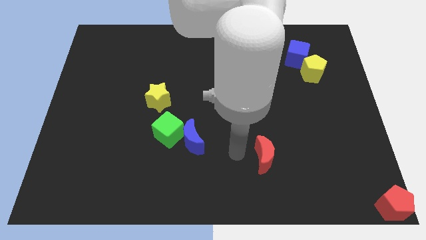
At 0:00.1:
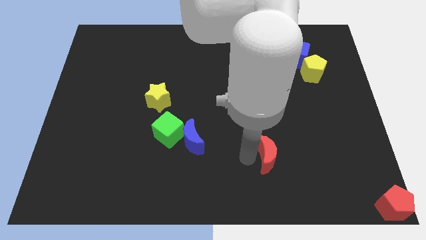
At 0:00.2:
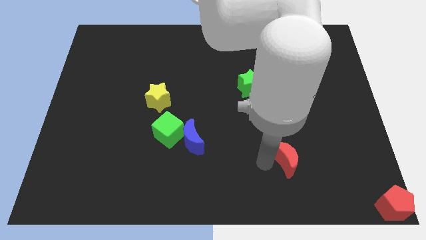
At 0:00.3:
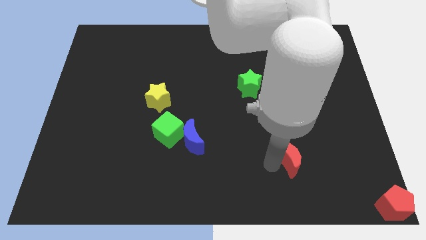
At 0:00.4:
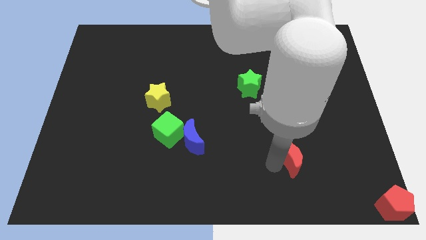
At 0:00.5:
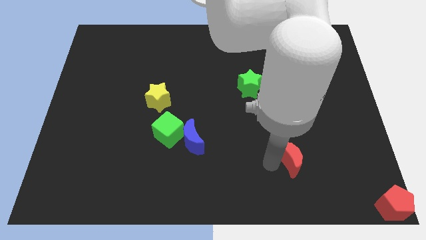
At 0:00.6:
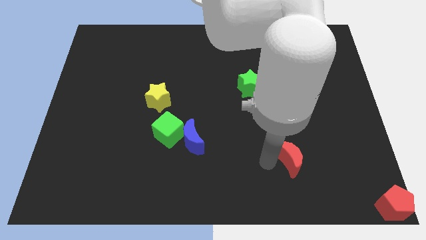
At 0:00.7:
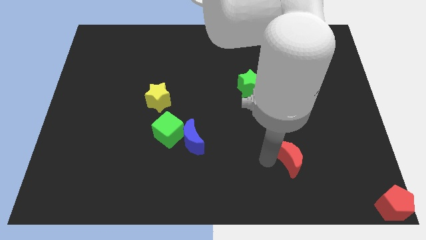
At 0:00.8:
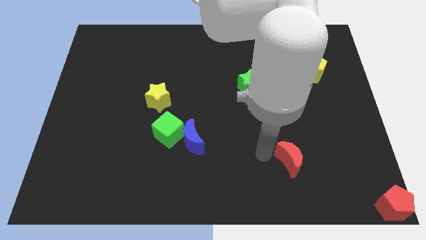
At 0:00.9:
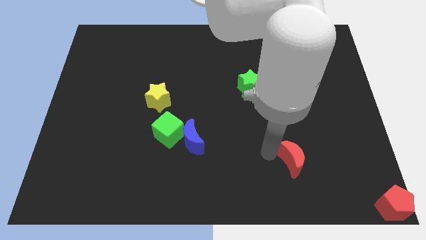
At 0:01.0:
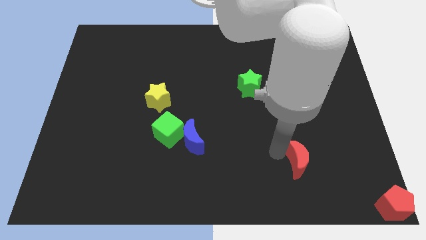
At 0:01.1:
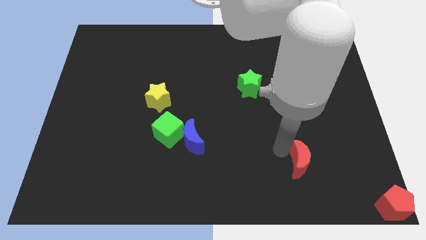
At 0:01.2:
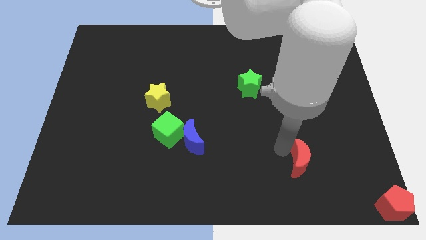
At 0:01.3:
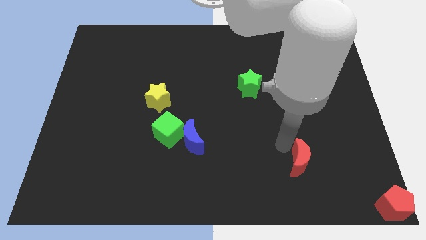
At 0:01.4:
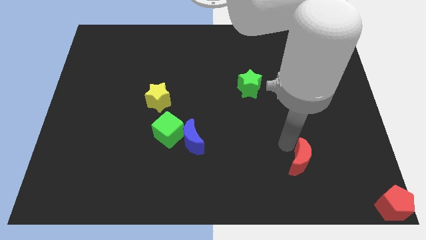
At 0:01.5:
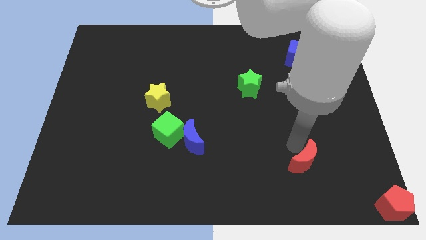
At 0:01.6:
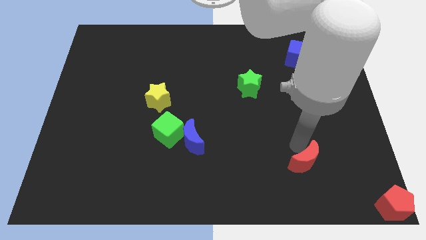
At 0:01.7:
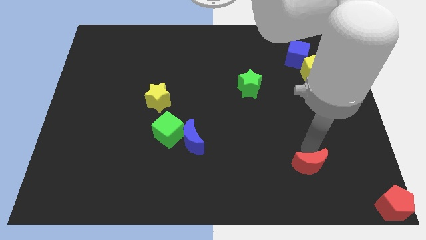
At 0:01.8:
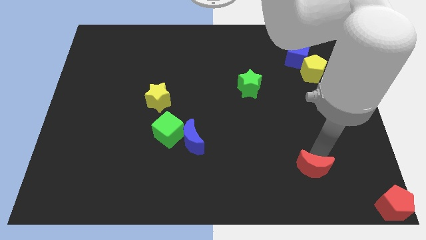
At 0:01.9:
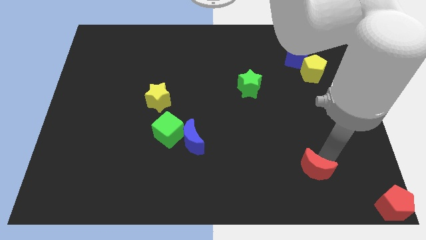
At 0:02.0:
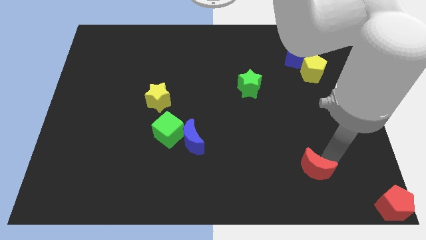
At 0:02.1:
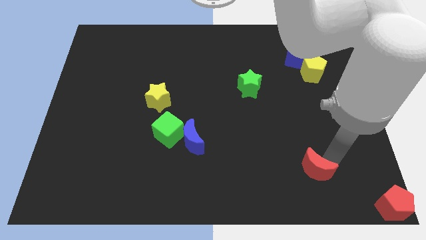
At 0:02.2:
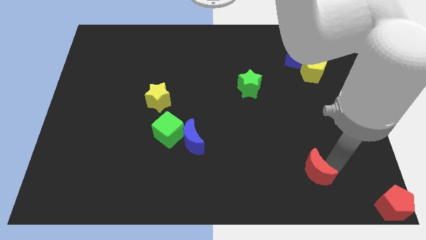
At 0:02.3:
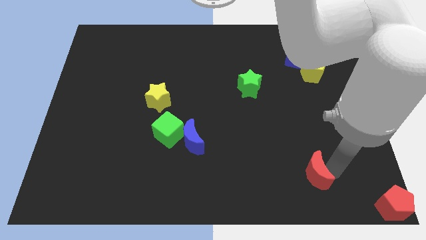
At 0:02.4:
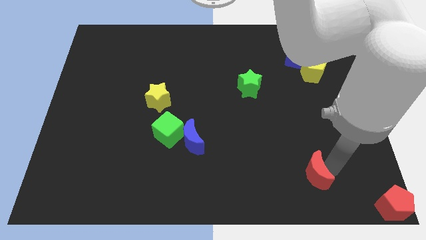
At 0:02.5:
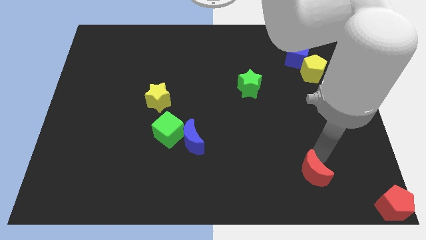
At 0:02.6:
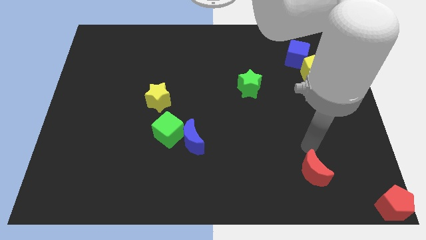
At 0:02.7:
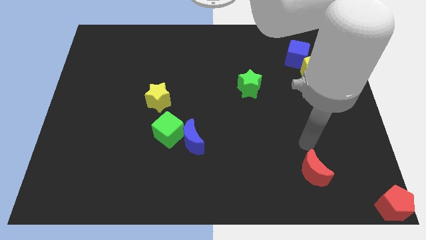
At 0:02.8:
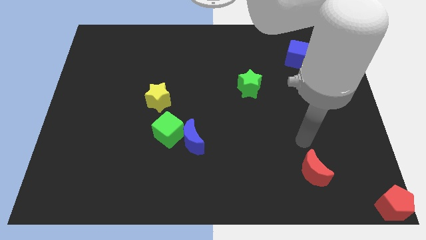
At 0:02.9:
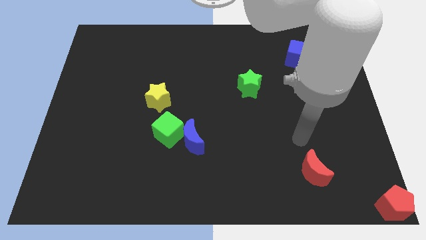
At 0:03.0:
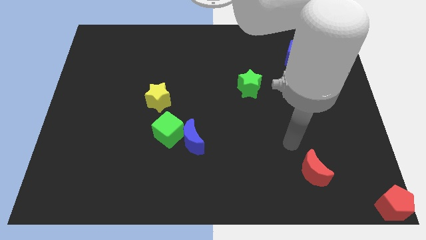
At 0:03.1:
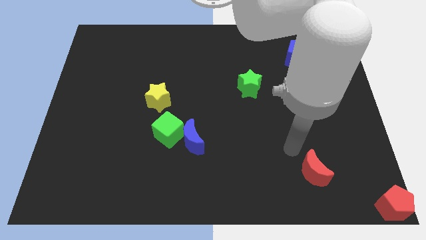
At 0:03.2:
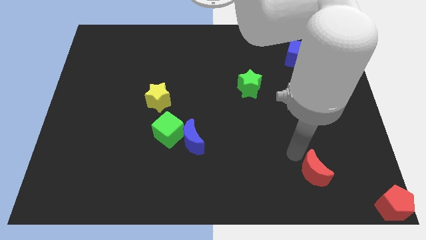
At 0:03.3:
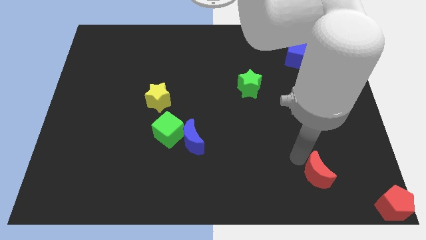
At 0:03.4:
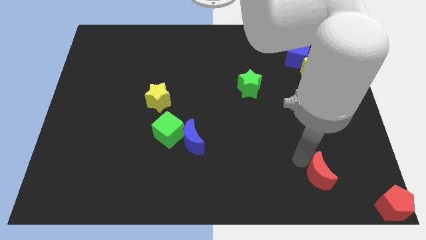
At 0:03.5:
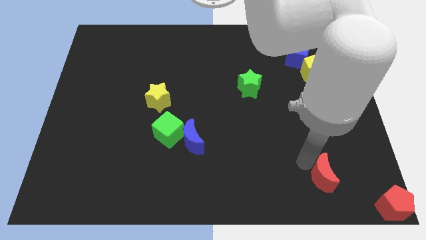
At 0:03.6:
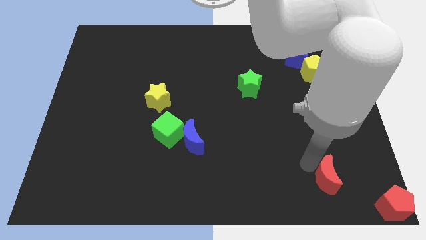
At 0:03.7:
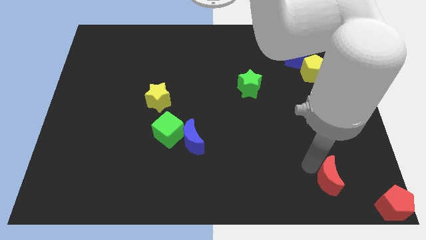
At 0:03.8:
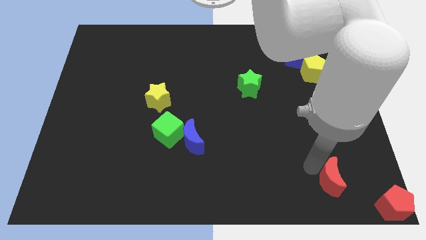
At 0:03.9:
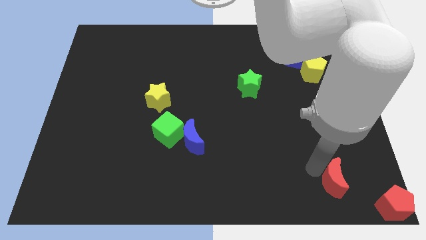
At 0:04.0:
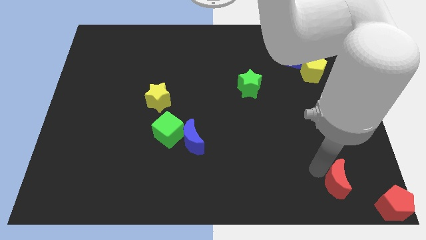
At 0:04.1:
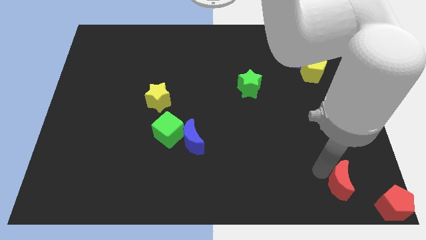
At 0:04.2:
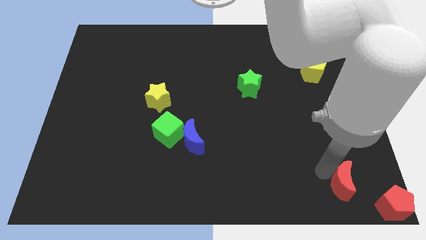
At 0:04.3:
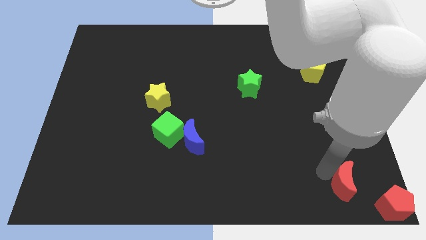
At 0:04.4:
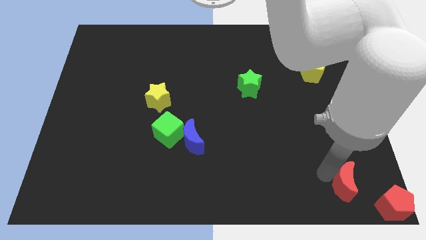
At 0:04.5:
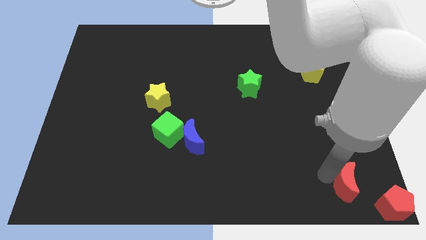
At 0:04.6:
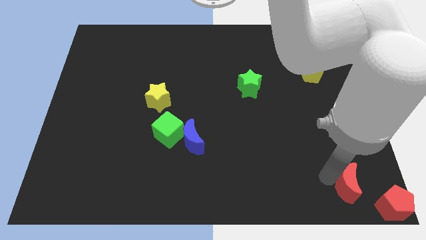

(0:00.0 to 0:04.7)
push the red crescent towards the bottom right corner of the board

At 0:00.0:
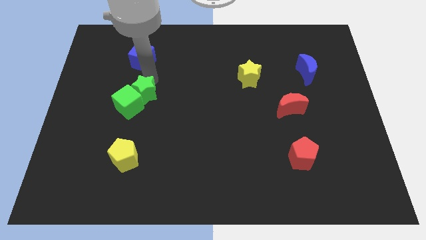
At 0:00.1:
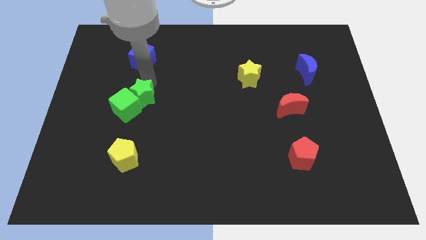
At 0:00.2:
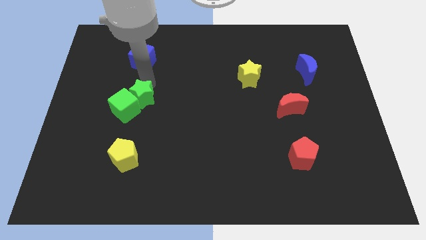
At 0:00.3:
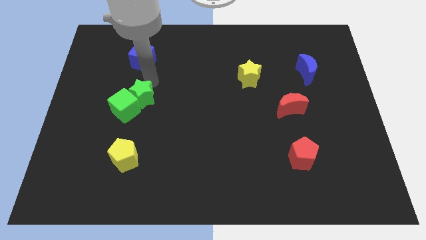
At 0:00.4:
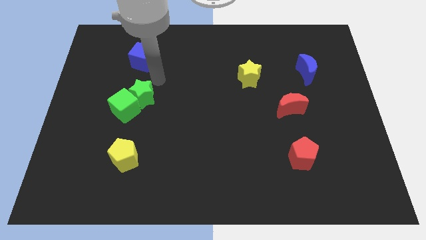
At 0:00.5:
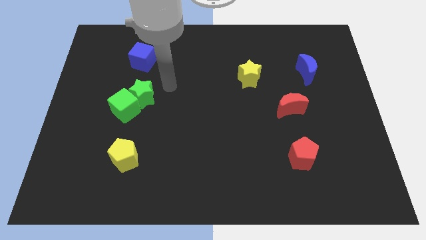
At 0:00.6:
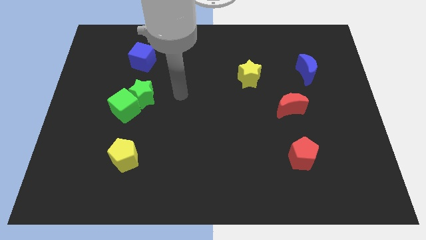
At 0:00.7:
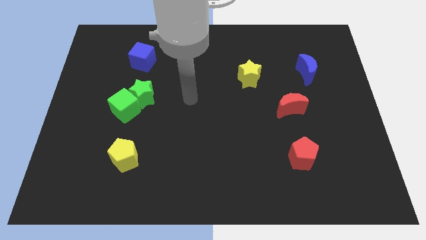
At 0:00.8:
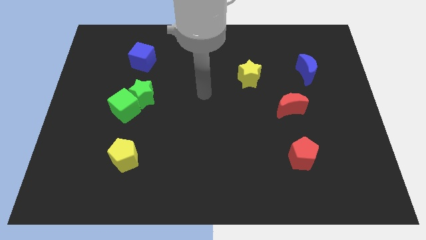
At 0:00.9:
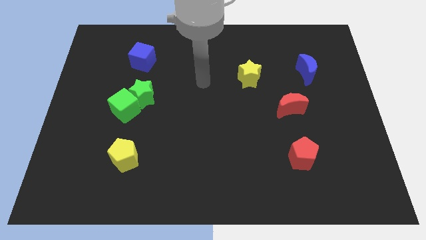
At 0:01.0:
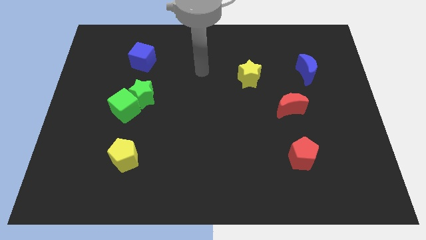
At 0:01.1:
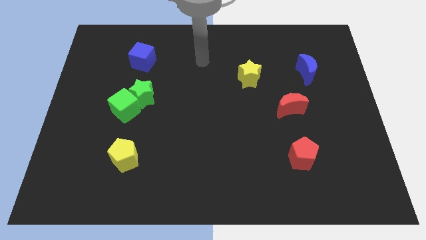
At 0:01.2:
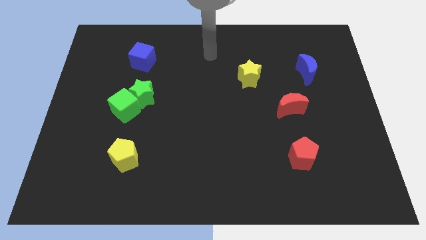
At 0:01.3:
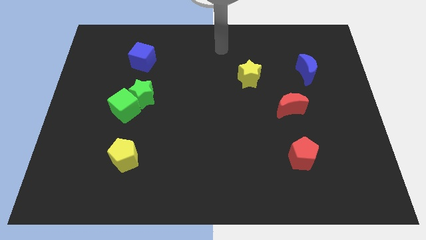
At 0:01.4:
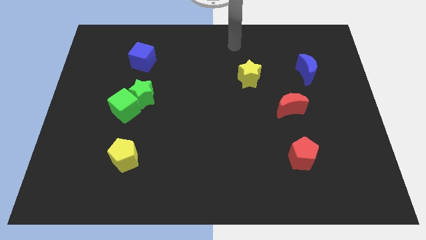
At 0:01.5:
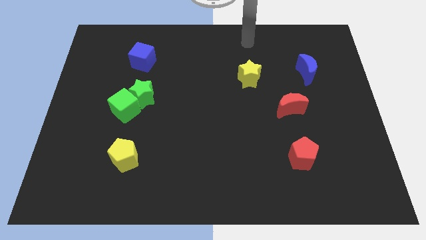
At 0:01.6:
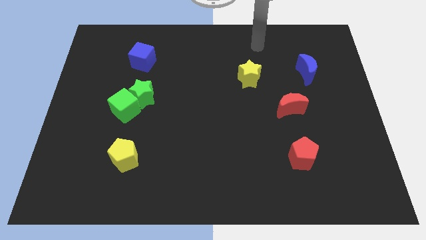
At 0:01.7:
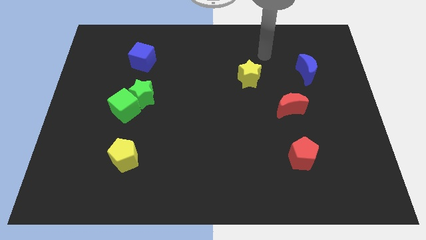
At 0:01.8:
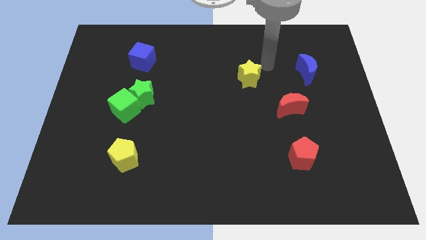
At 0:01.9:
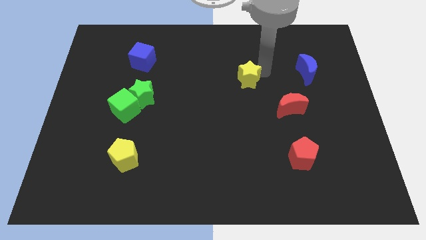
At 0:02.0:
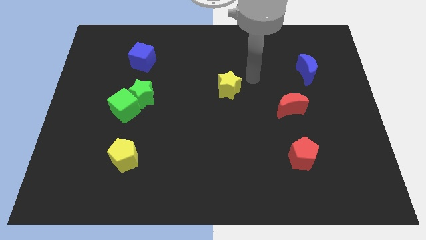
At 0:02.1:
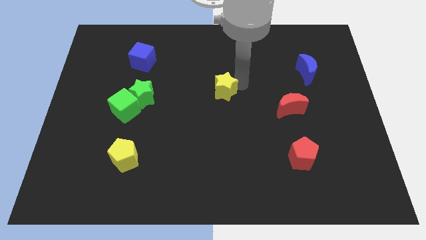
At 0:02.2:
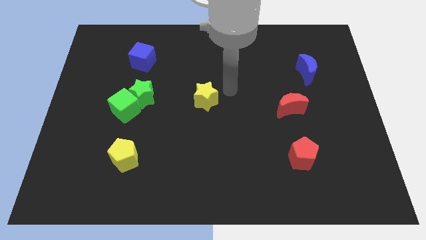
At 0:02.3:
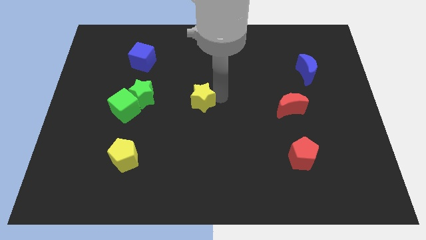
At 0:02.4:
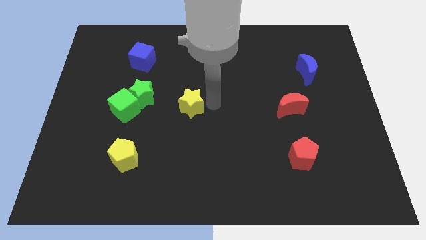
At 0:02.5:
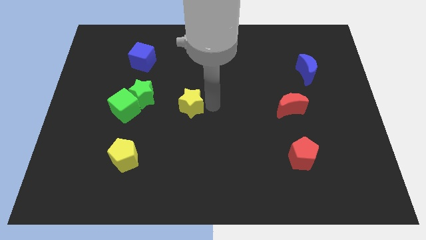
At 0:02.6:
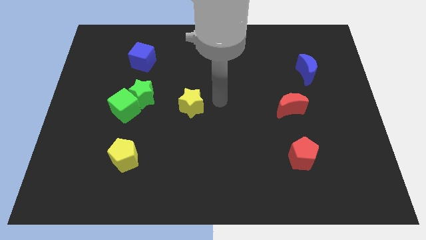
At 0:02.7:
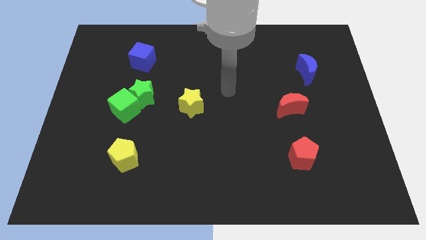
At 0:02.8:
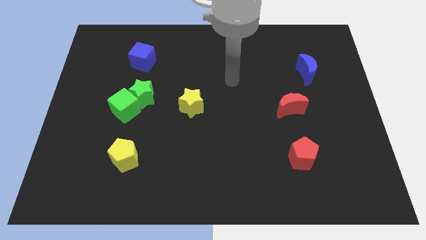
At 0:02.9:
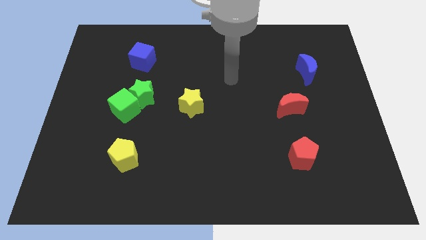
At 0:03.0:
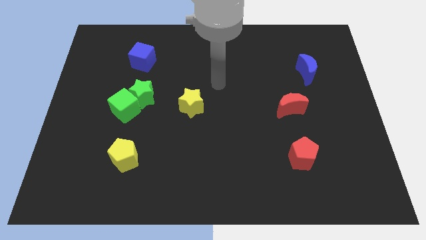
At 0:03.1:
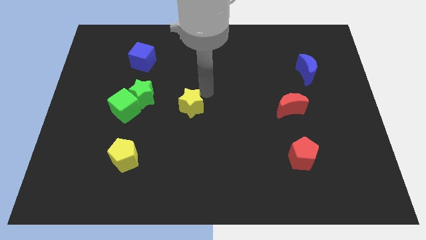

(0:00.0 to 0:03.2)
move yellow star to the centre of the board

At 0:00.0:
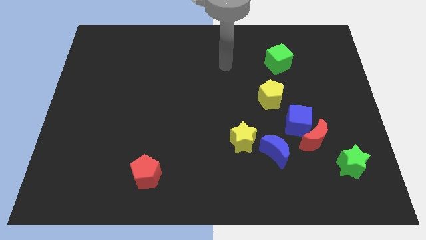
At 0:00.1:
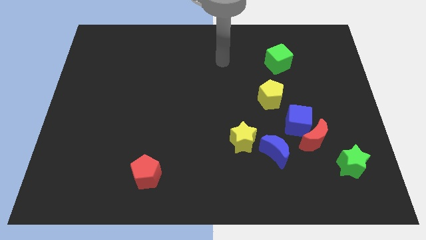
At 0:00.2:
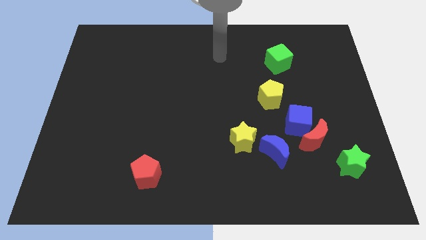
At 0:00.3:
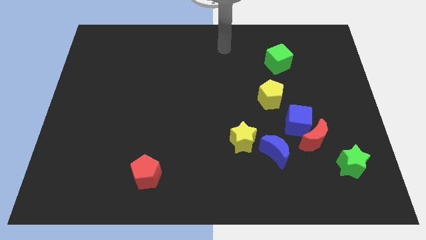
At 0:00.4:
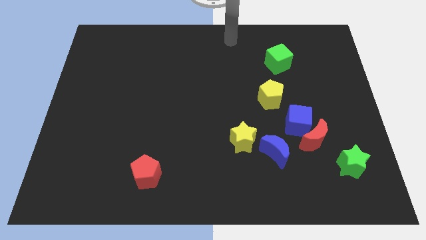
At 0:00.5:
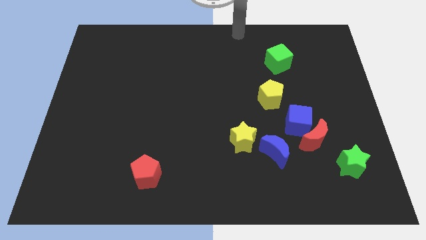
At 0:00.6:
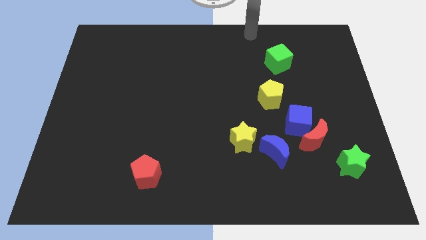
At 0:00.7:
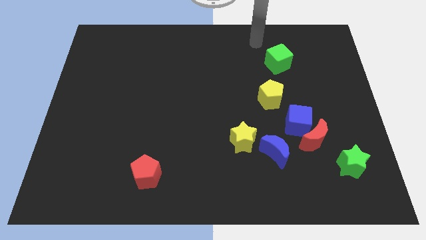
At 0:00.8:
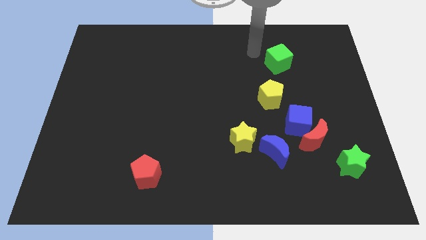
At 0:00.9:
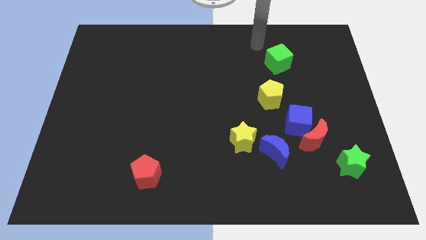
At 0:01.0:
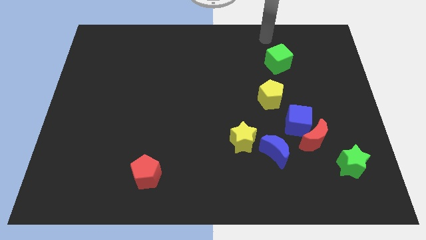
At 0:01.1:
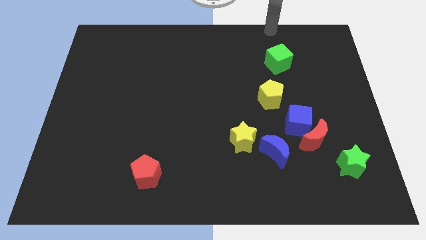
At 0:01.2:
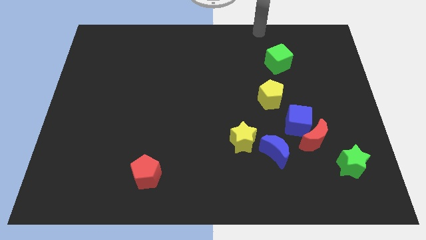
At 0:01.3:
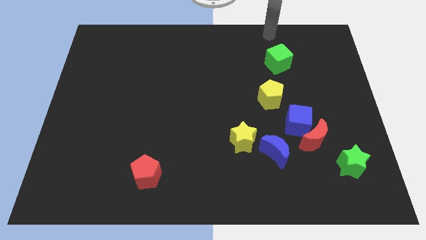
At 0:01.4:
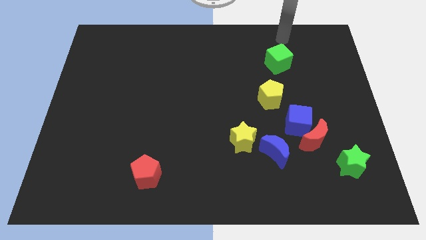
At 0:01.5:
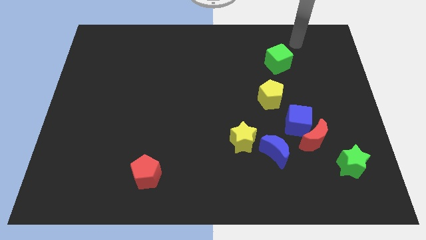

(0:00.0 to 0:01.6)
place your arm above the green cube
